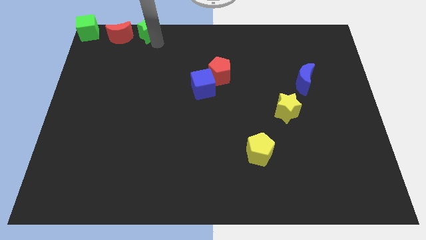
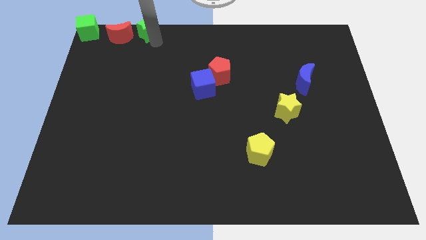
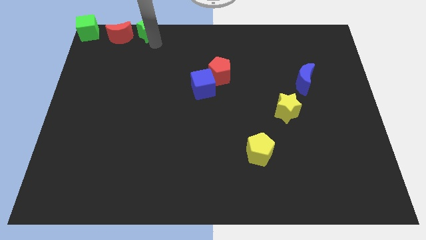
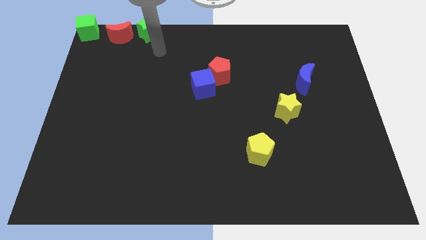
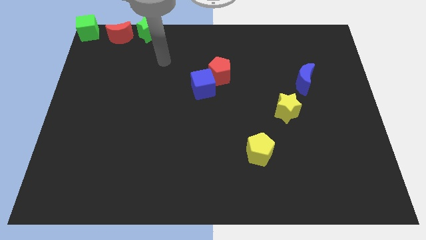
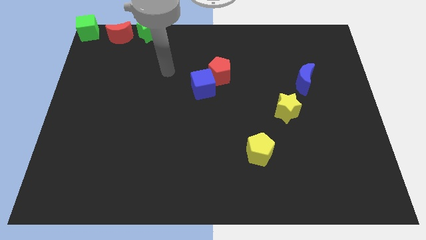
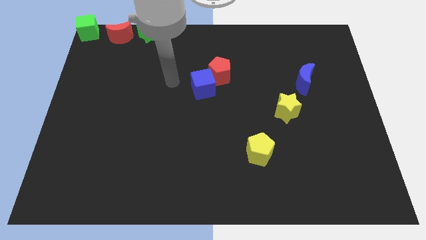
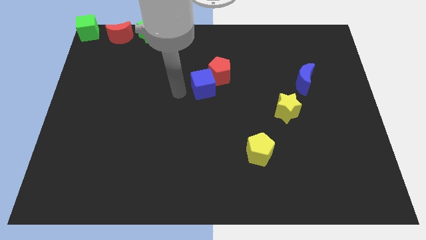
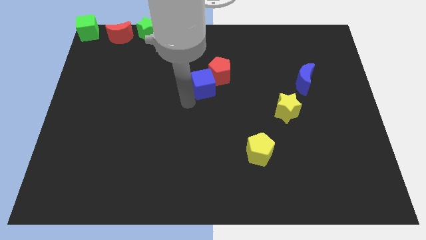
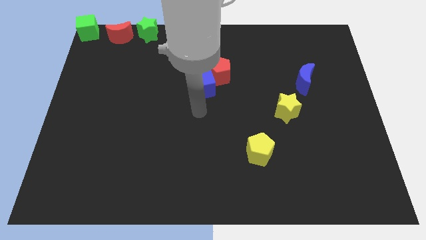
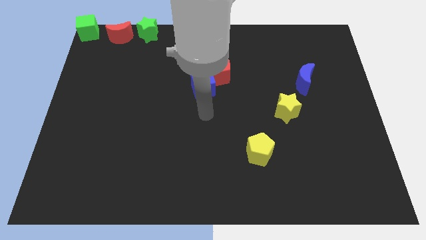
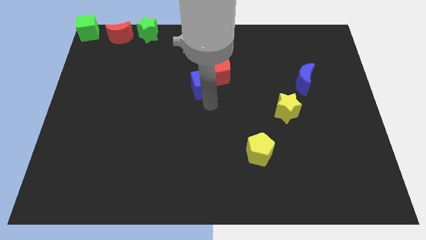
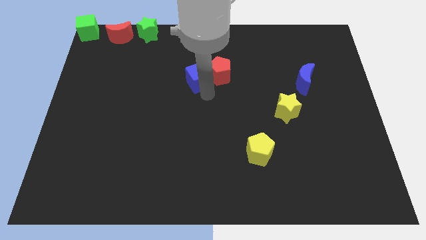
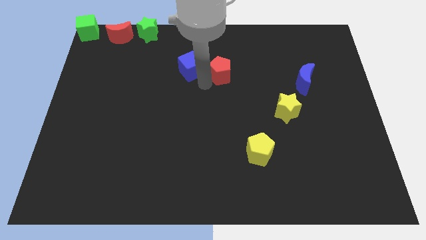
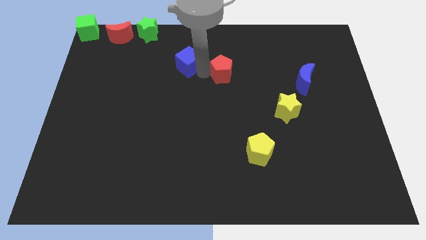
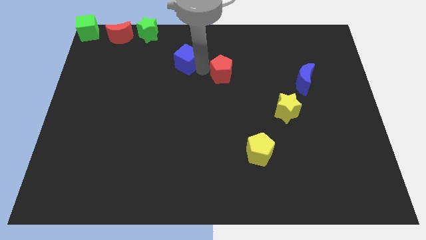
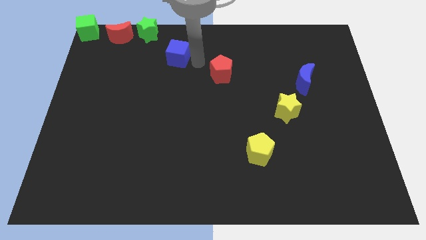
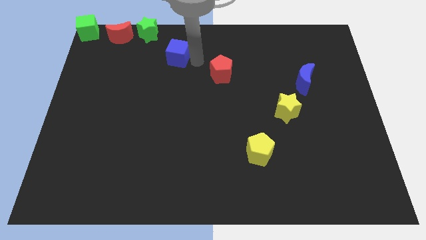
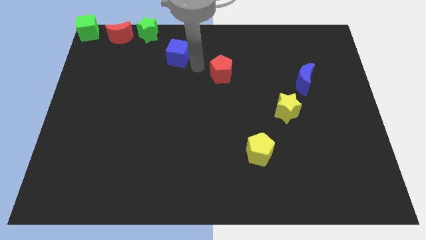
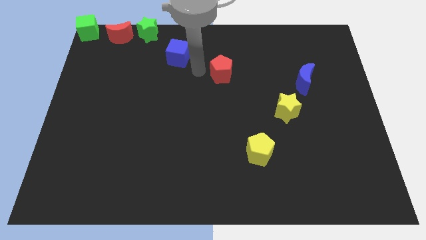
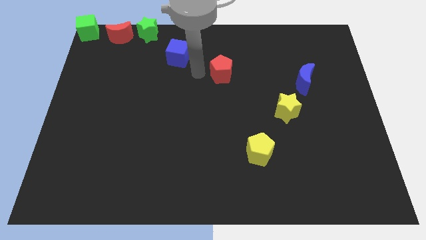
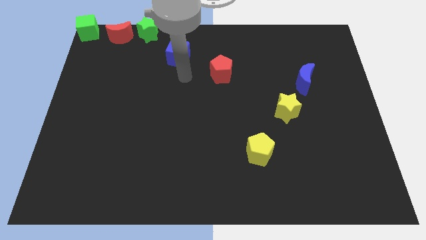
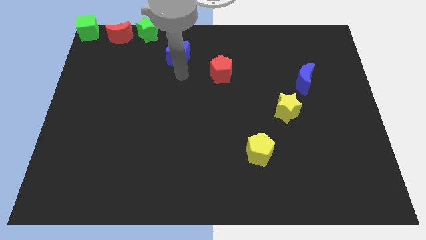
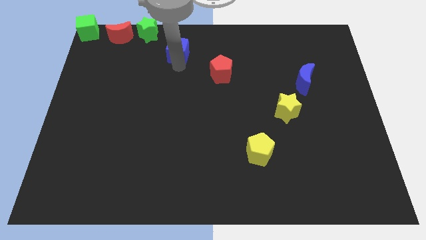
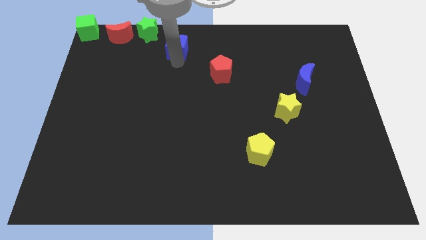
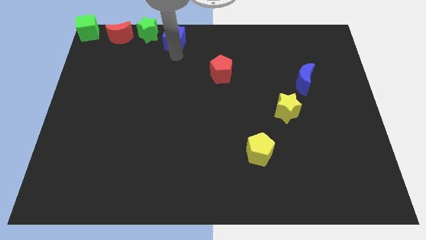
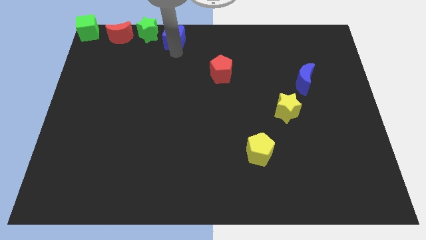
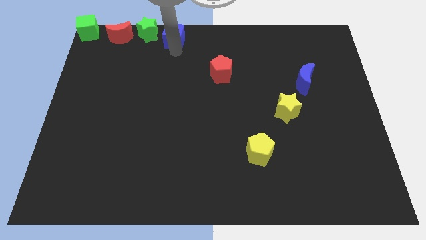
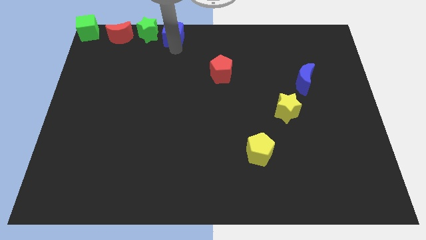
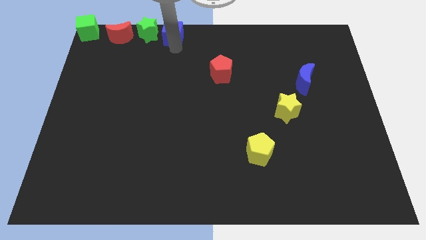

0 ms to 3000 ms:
push the blue cube to the top

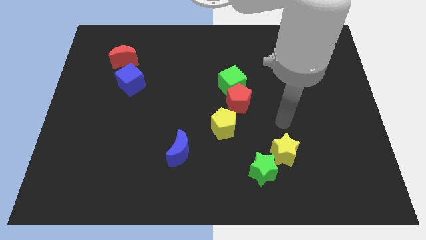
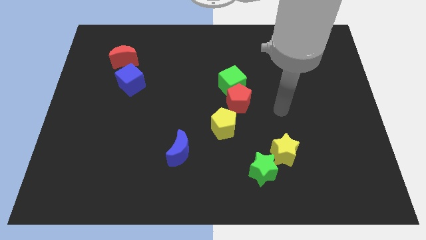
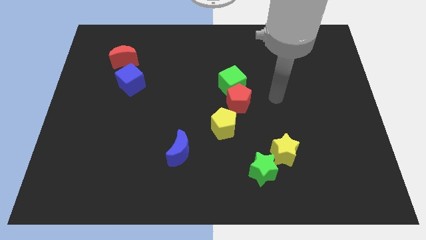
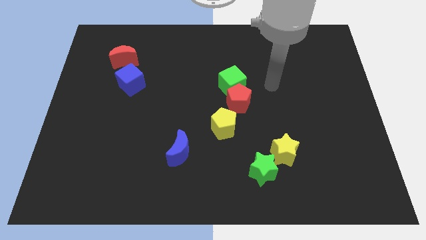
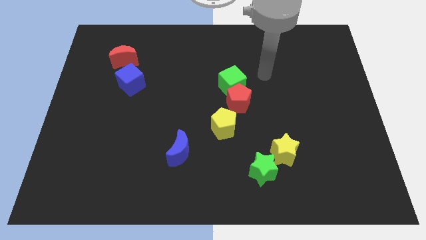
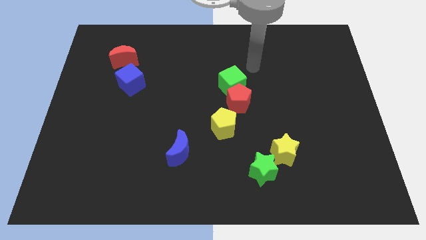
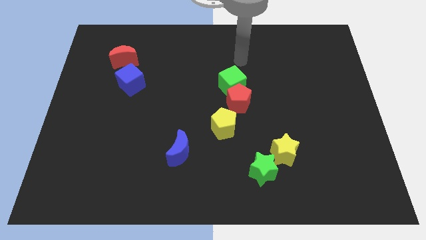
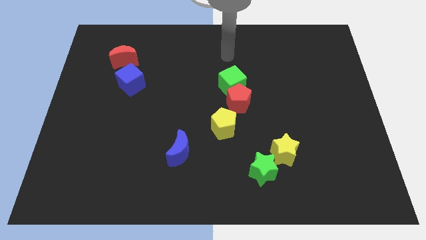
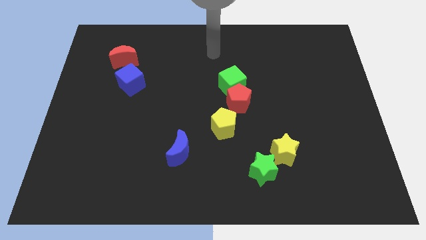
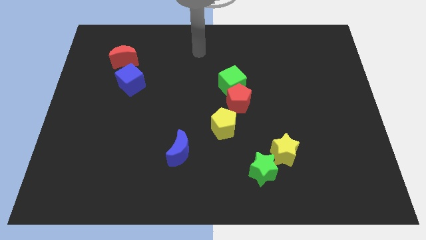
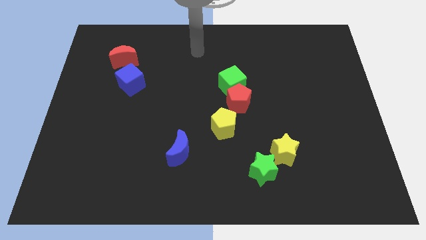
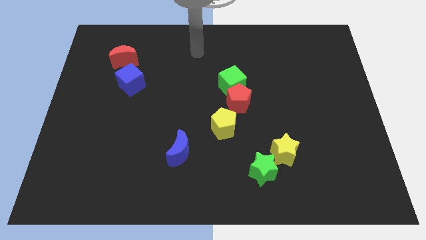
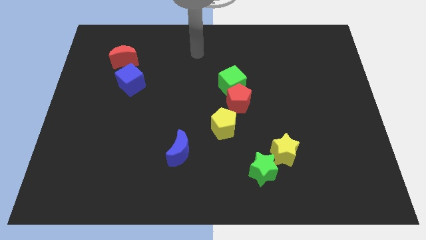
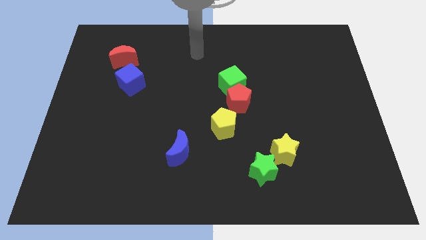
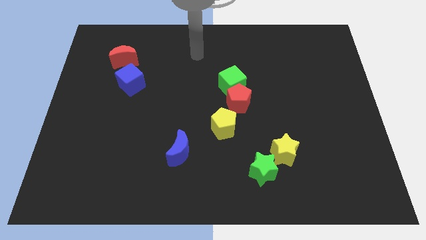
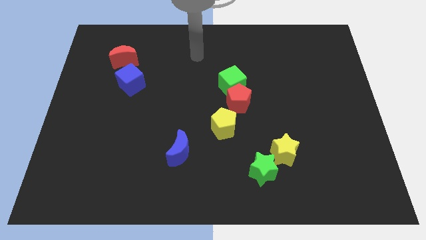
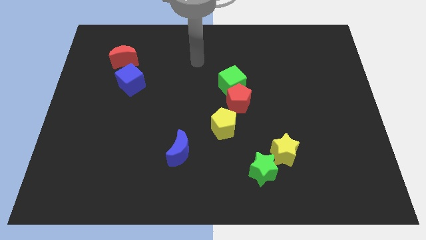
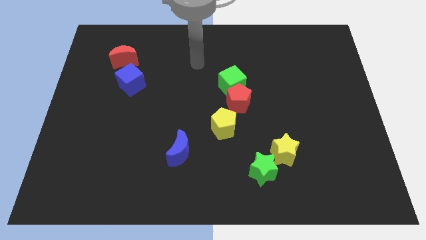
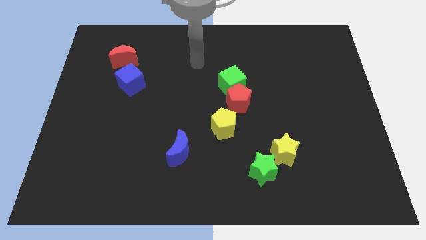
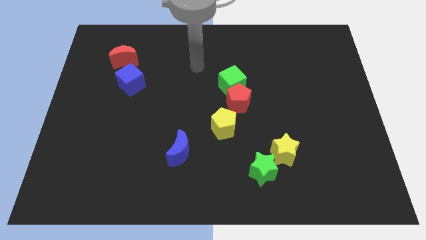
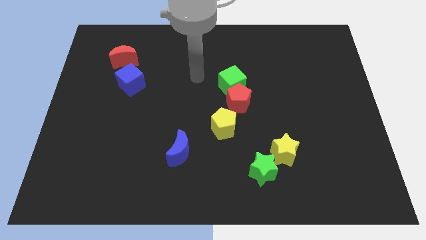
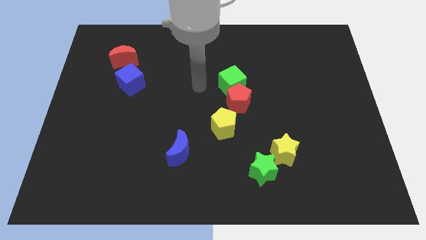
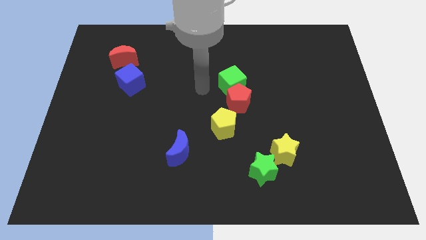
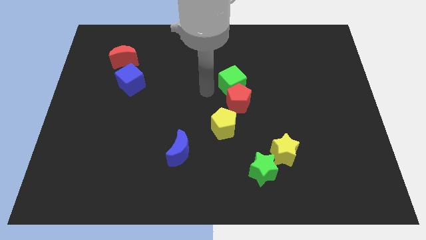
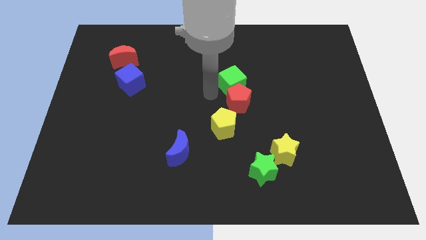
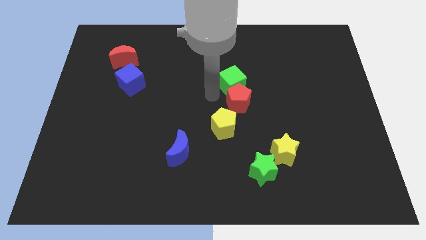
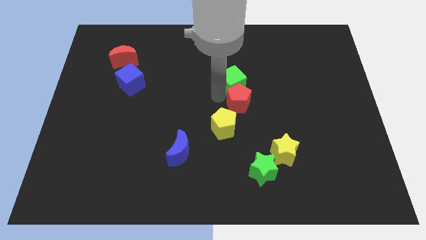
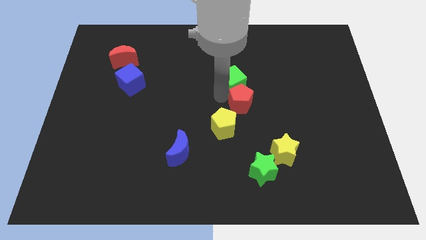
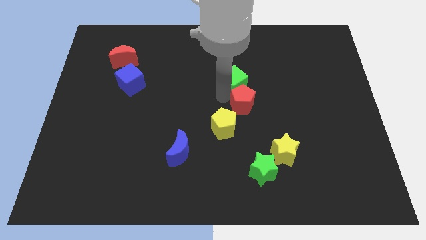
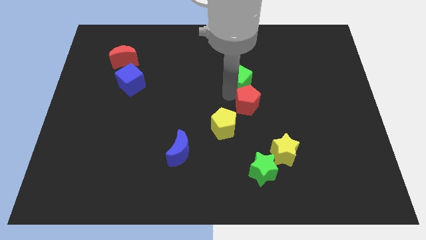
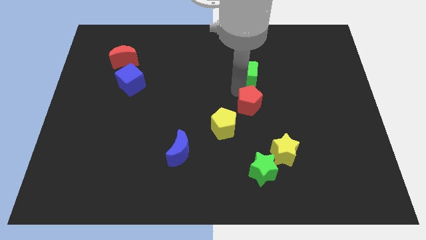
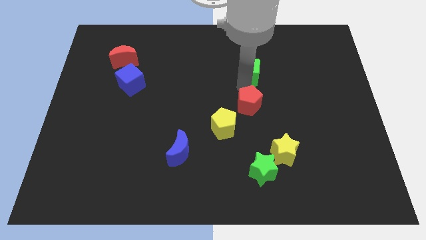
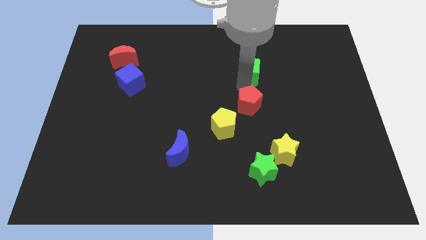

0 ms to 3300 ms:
separate the green cube from the red penatgon

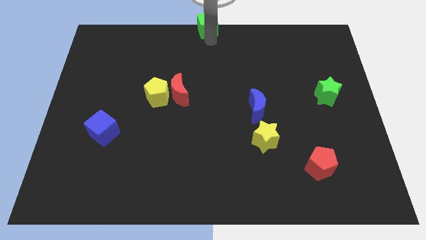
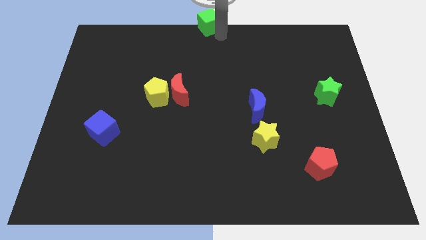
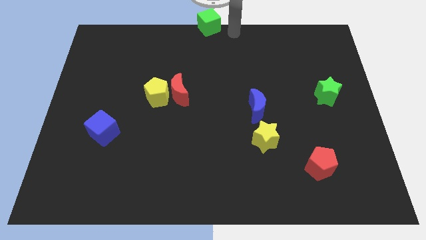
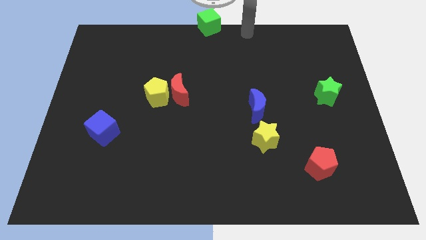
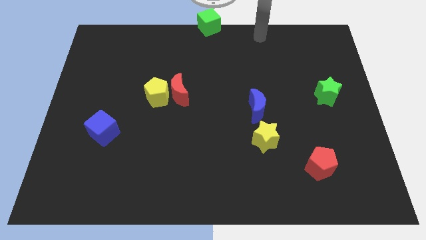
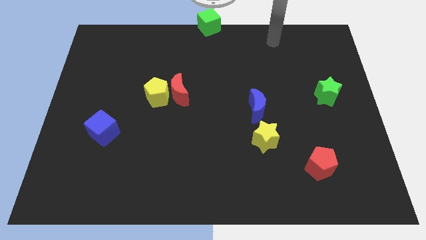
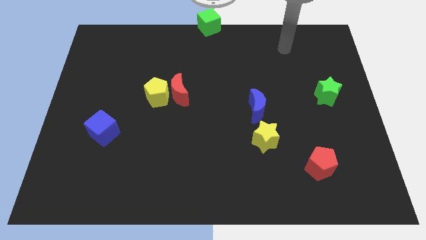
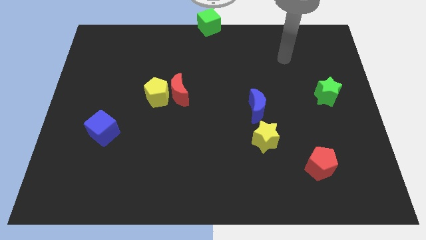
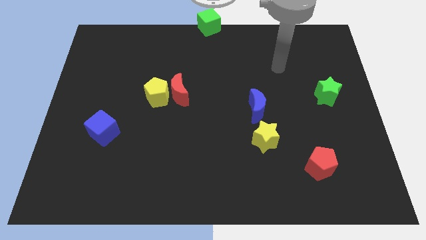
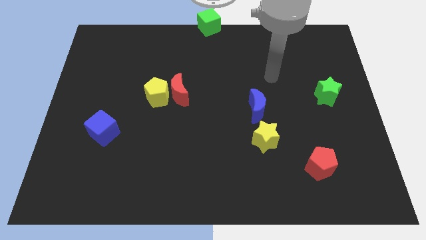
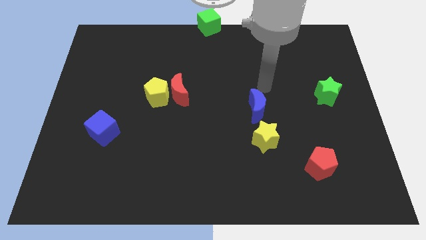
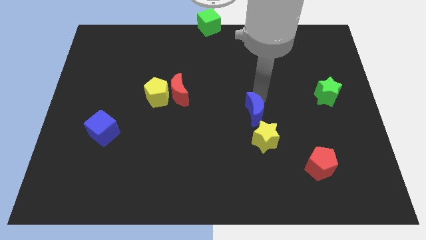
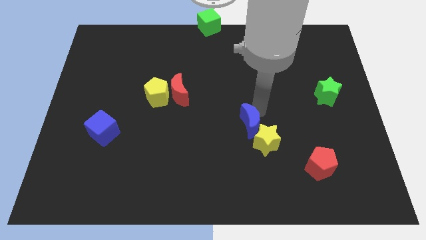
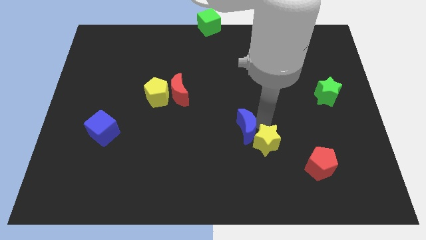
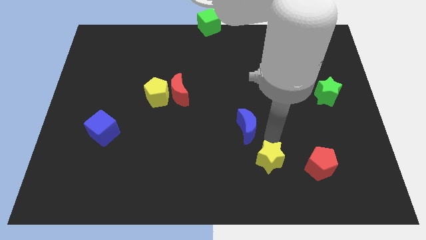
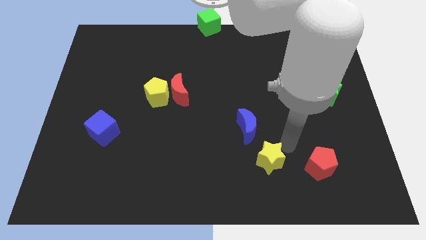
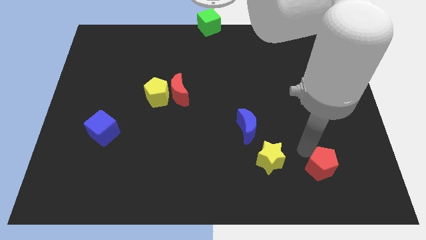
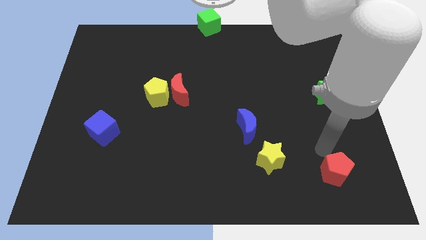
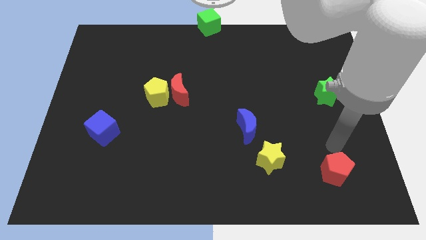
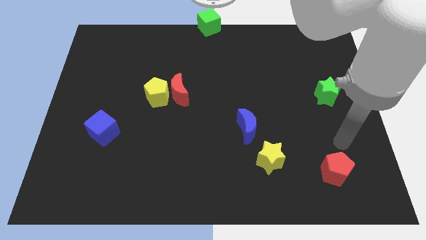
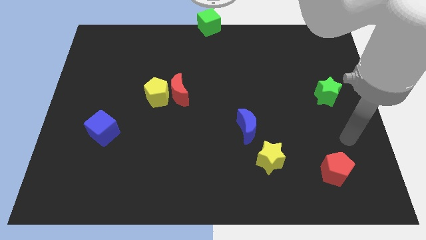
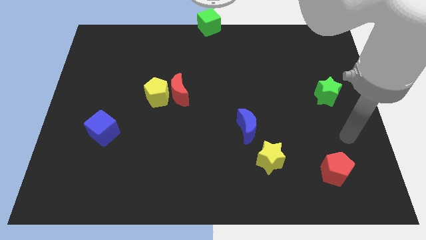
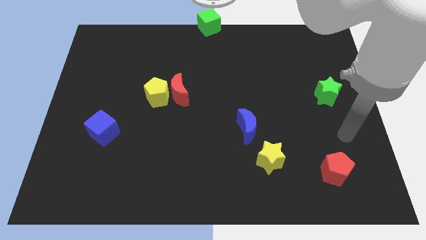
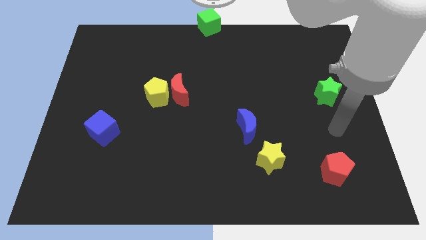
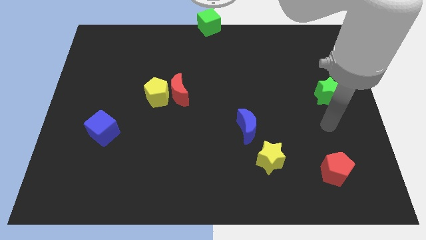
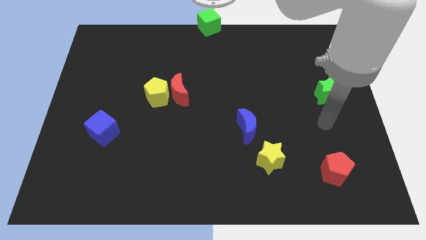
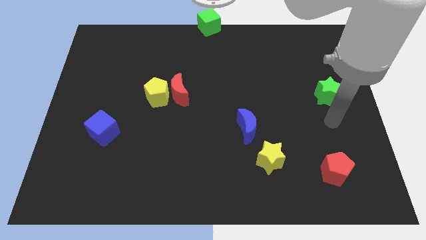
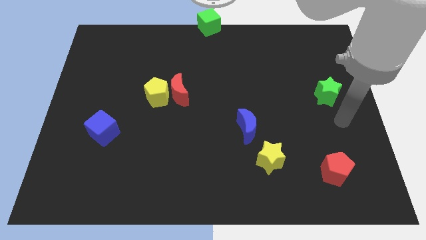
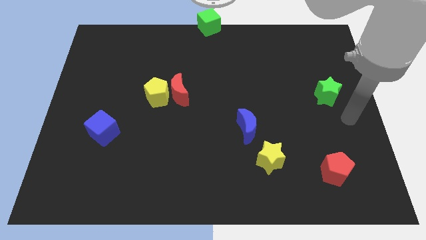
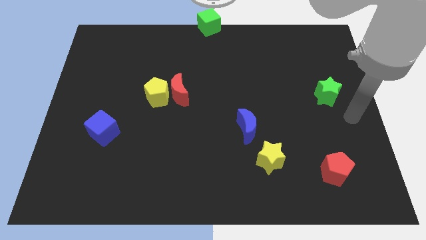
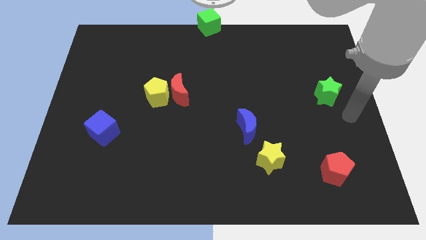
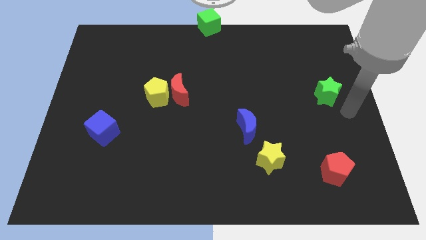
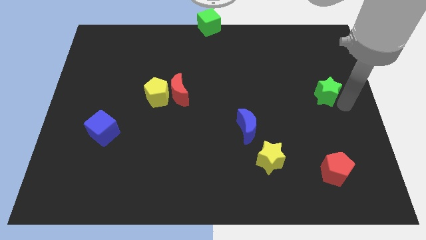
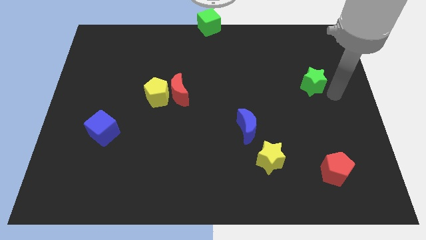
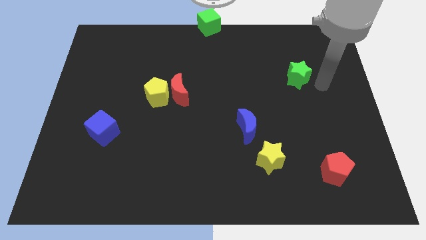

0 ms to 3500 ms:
place the green star above the red pentagon
